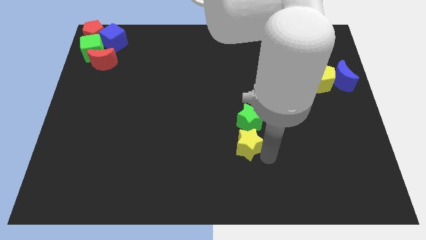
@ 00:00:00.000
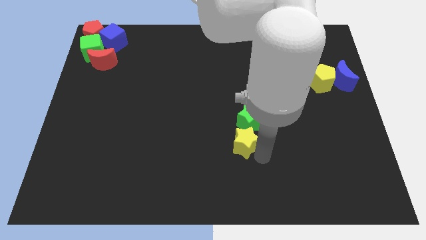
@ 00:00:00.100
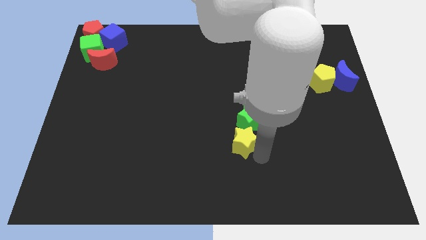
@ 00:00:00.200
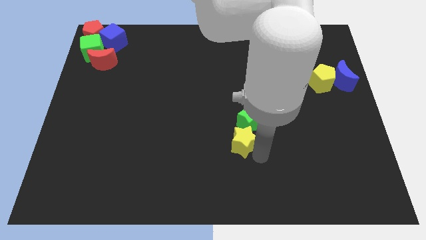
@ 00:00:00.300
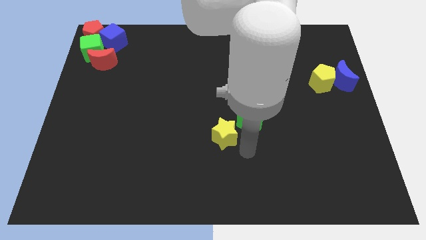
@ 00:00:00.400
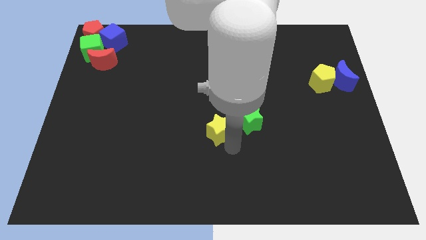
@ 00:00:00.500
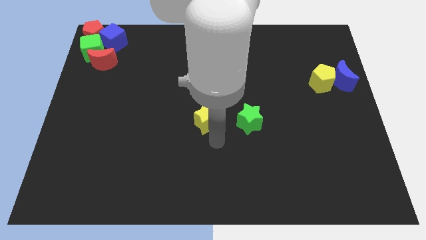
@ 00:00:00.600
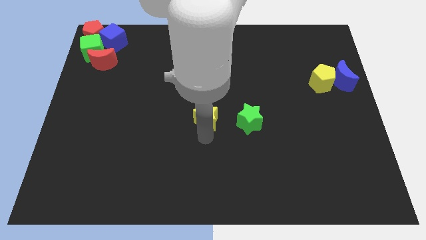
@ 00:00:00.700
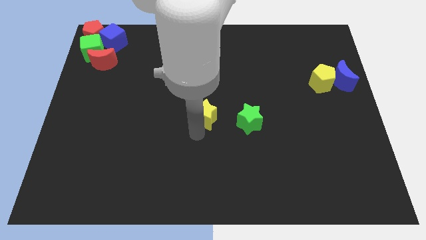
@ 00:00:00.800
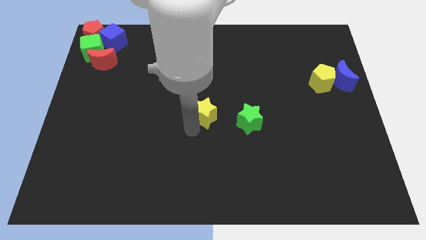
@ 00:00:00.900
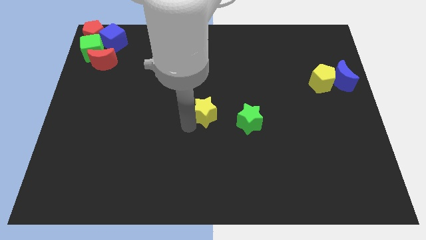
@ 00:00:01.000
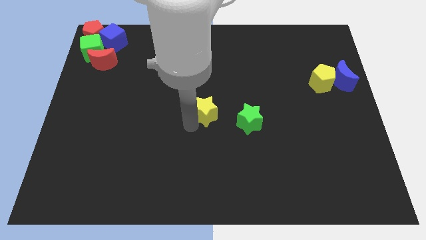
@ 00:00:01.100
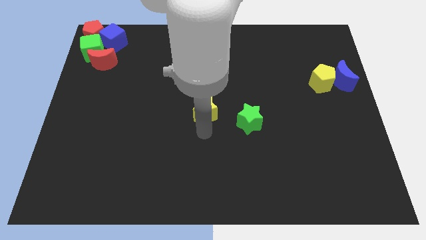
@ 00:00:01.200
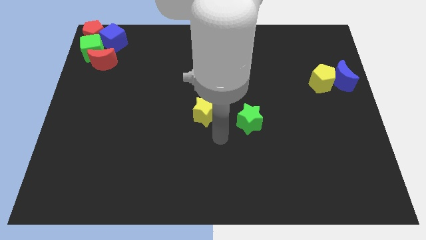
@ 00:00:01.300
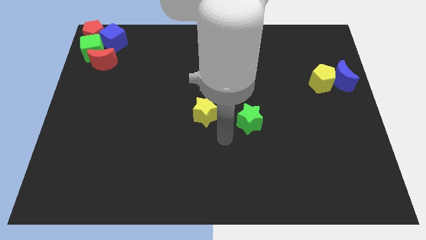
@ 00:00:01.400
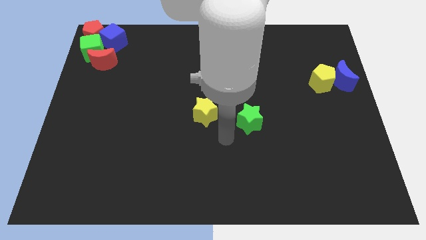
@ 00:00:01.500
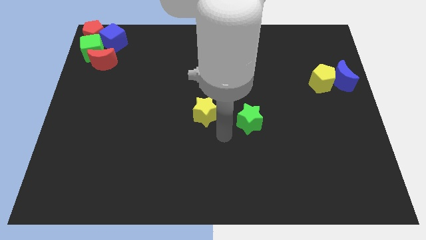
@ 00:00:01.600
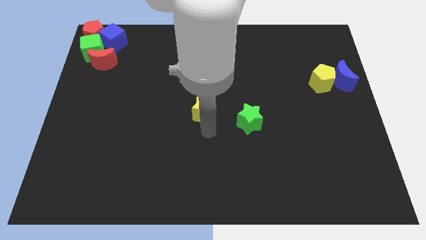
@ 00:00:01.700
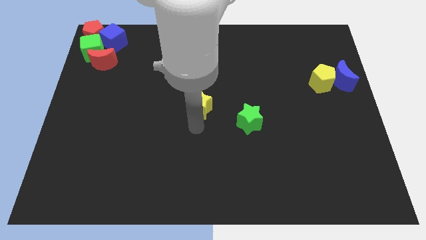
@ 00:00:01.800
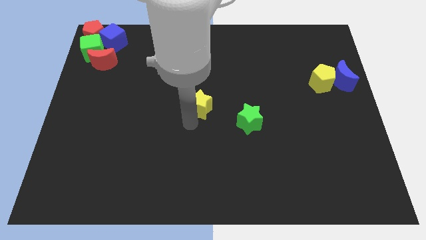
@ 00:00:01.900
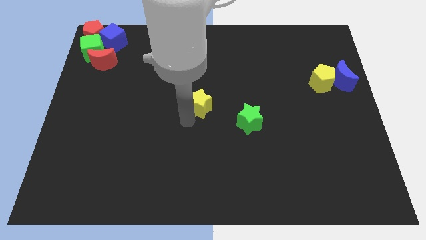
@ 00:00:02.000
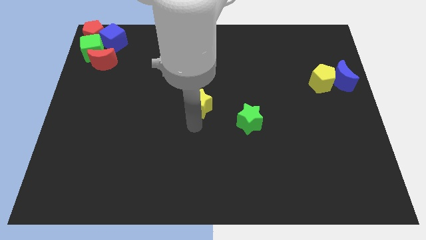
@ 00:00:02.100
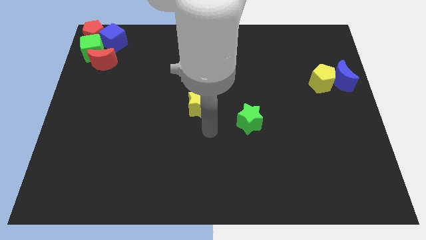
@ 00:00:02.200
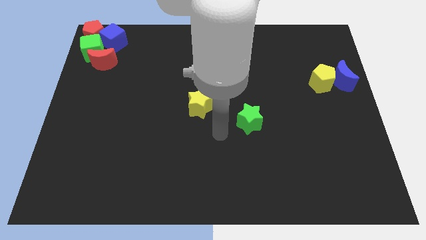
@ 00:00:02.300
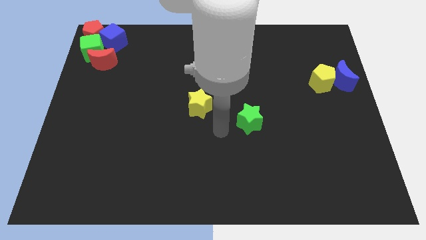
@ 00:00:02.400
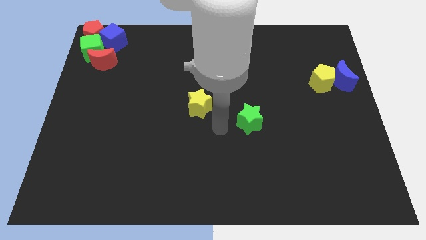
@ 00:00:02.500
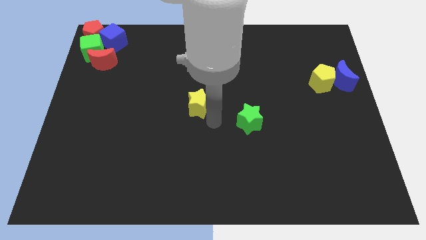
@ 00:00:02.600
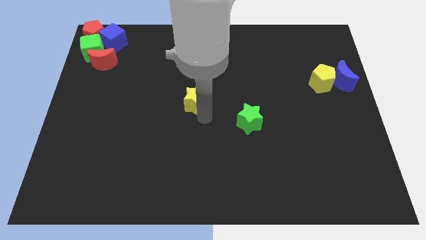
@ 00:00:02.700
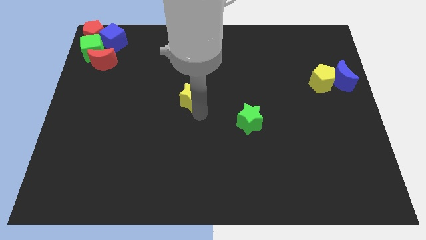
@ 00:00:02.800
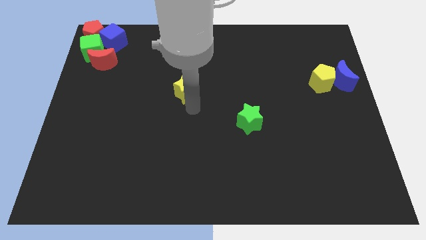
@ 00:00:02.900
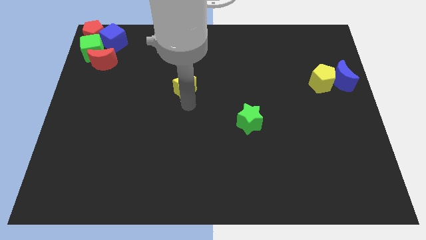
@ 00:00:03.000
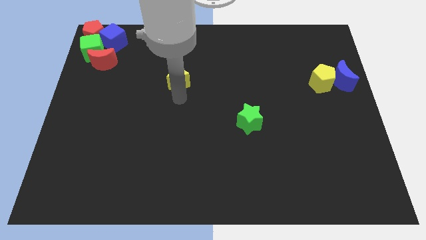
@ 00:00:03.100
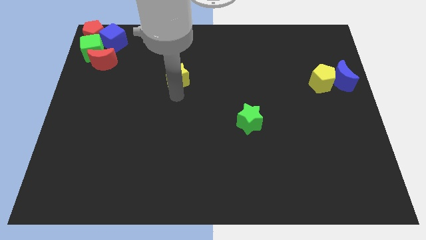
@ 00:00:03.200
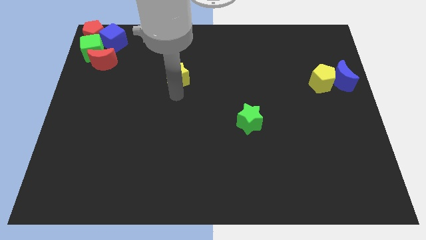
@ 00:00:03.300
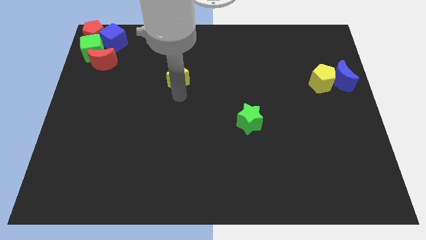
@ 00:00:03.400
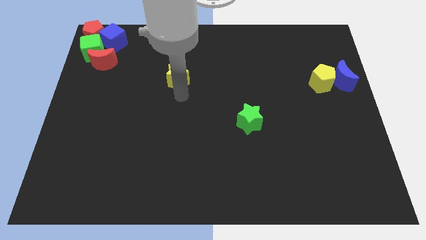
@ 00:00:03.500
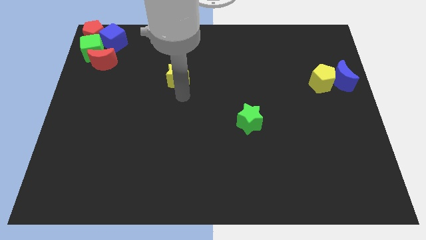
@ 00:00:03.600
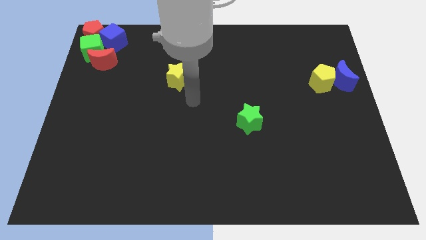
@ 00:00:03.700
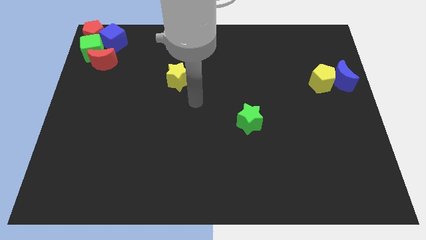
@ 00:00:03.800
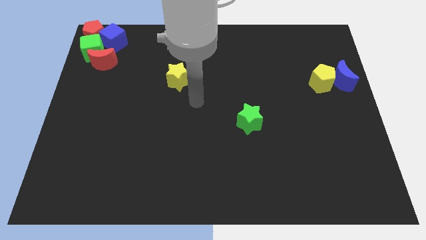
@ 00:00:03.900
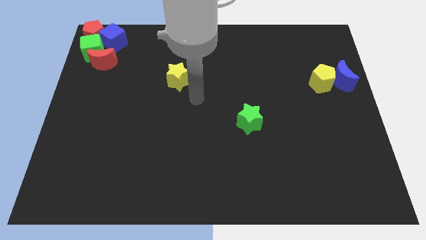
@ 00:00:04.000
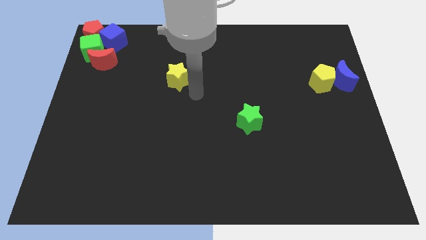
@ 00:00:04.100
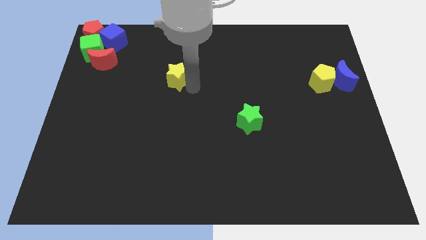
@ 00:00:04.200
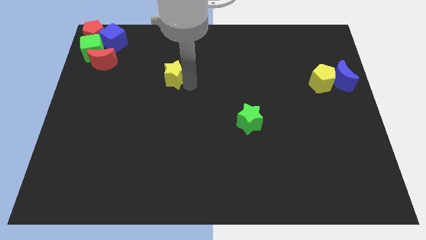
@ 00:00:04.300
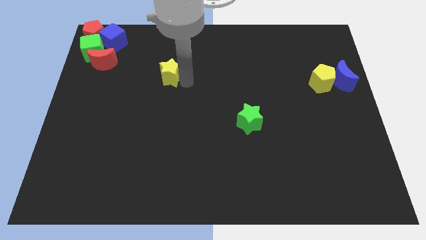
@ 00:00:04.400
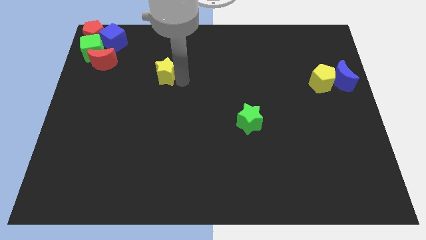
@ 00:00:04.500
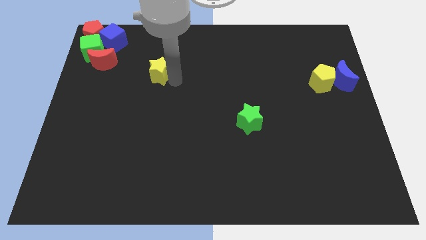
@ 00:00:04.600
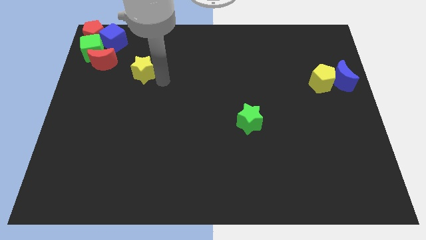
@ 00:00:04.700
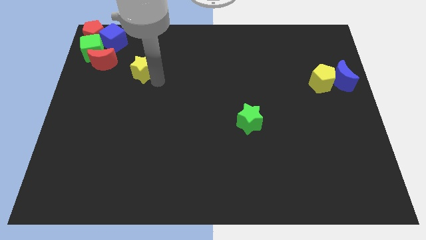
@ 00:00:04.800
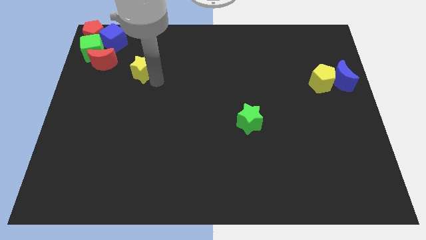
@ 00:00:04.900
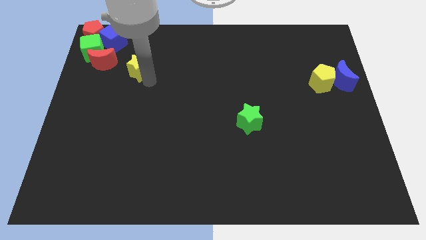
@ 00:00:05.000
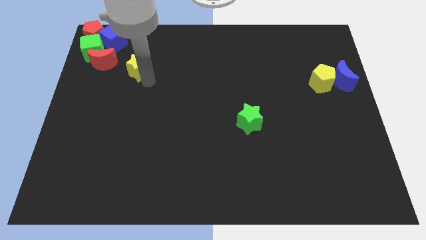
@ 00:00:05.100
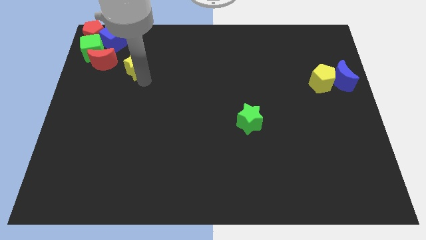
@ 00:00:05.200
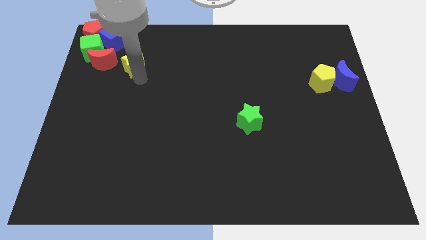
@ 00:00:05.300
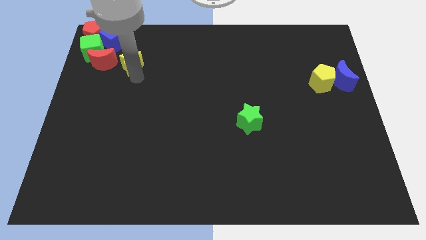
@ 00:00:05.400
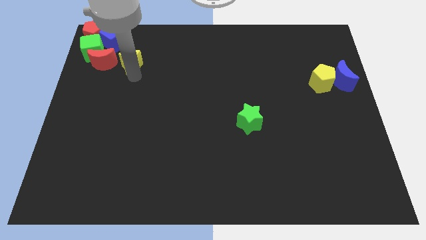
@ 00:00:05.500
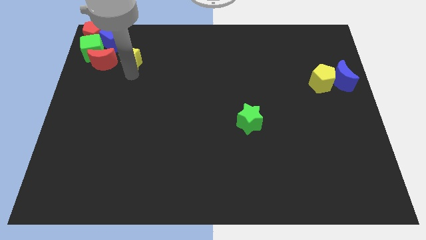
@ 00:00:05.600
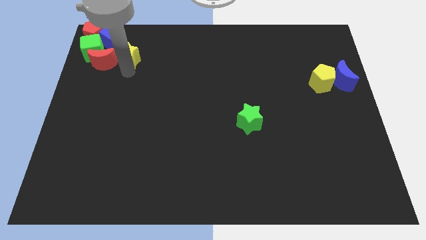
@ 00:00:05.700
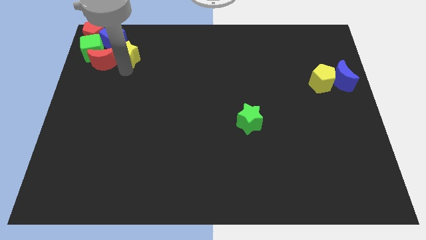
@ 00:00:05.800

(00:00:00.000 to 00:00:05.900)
move the yellow star towards a group of blocks

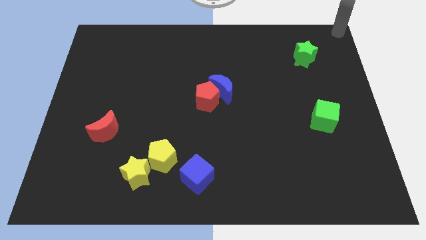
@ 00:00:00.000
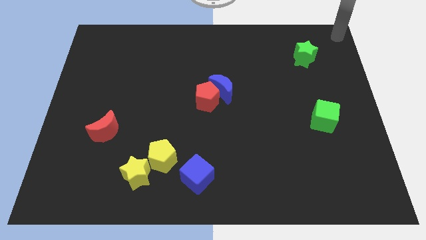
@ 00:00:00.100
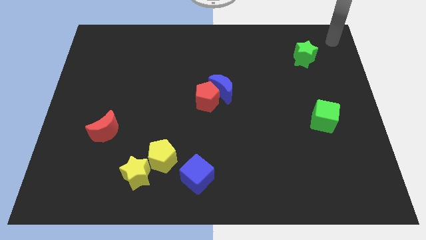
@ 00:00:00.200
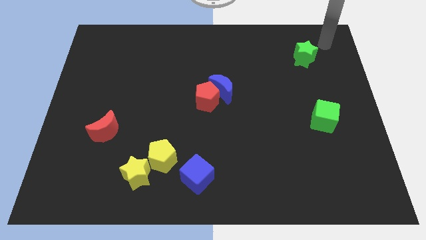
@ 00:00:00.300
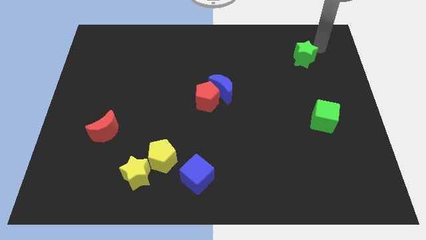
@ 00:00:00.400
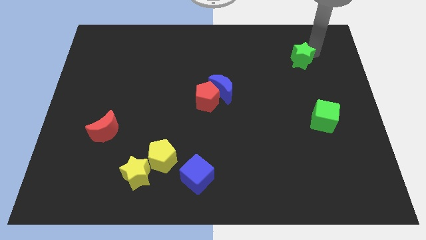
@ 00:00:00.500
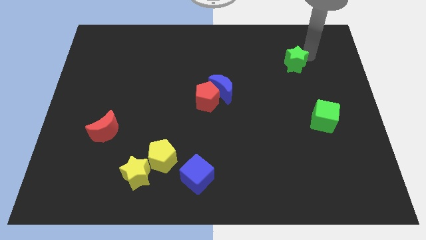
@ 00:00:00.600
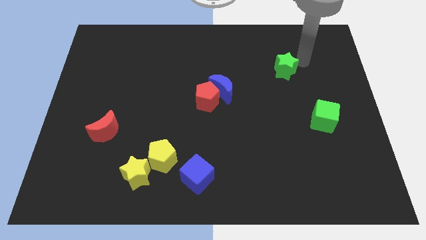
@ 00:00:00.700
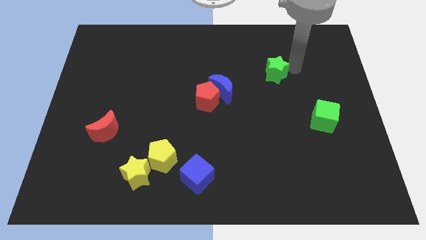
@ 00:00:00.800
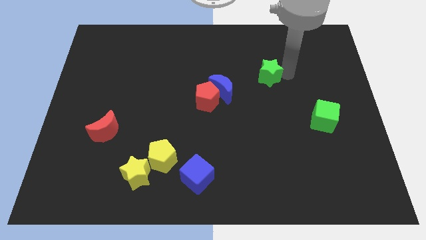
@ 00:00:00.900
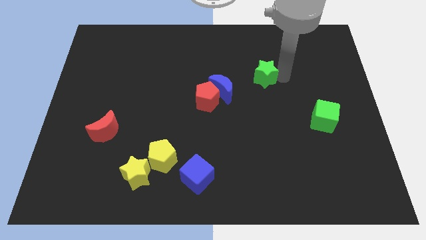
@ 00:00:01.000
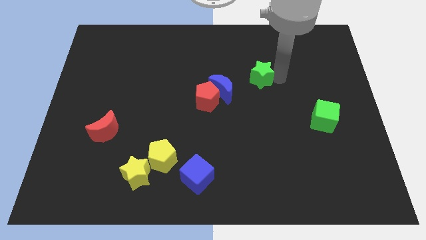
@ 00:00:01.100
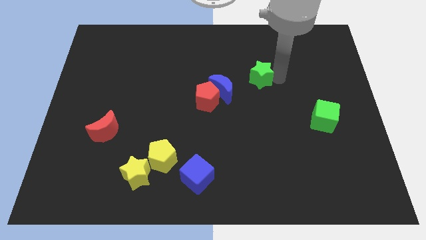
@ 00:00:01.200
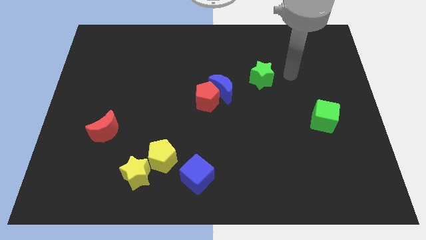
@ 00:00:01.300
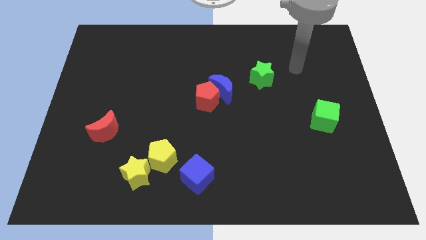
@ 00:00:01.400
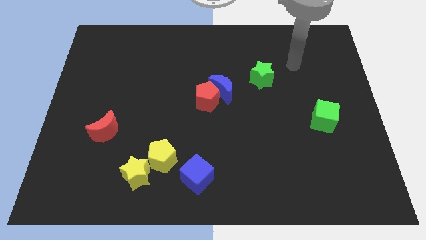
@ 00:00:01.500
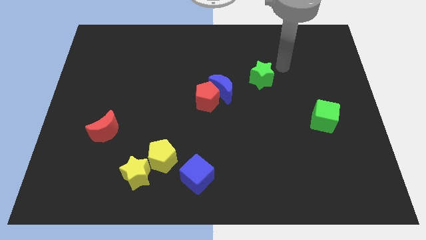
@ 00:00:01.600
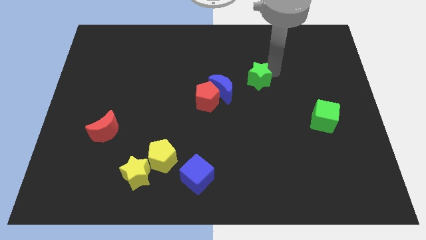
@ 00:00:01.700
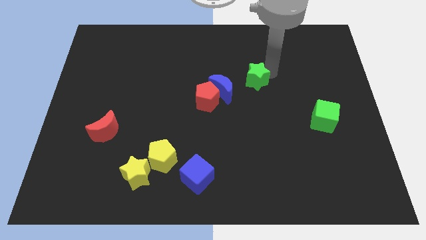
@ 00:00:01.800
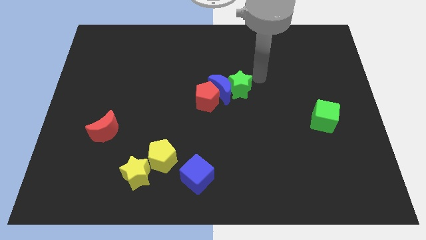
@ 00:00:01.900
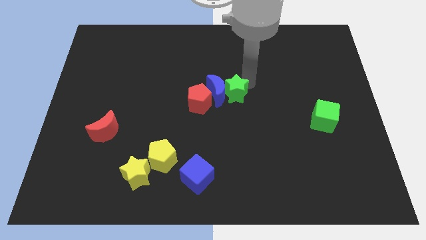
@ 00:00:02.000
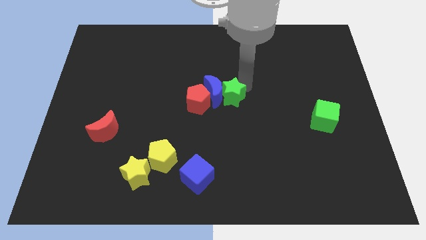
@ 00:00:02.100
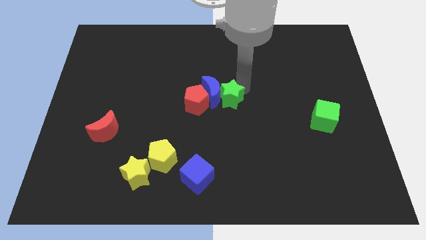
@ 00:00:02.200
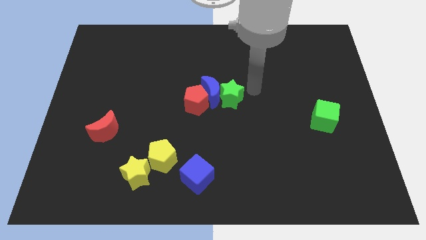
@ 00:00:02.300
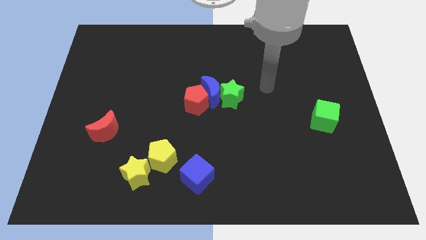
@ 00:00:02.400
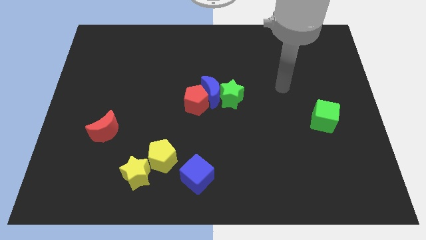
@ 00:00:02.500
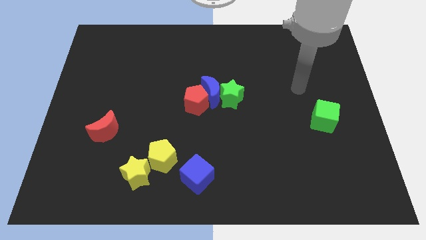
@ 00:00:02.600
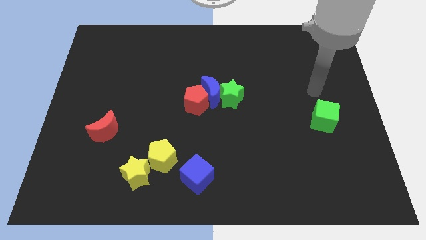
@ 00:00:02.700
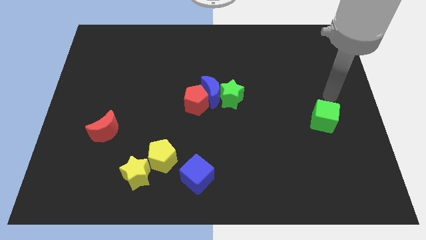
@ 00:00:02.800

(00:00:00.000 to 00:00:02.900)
move the green star into the group of objects

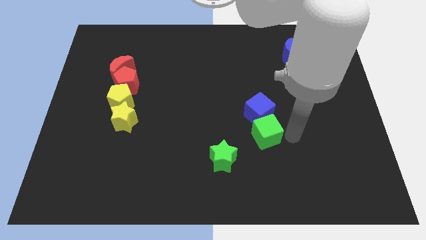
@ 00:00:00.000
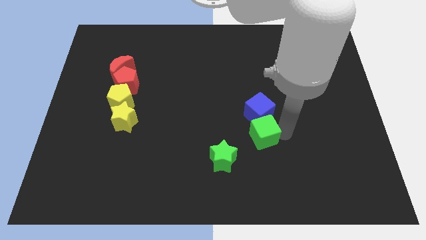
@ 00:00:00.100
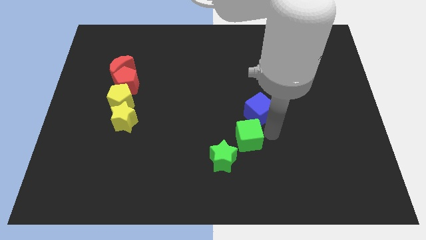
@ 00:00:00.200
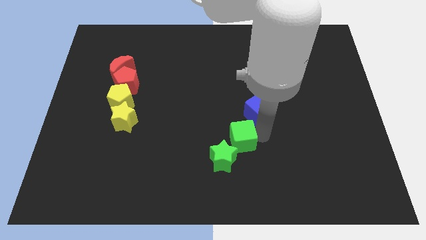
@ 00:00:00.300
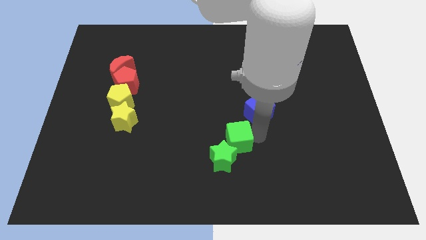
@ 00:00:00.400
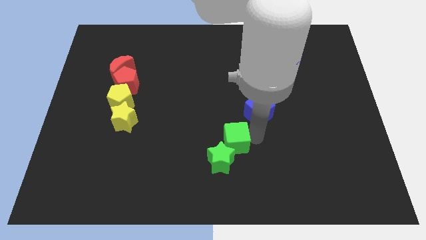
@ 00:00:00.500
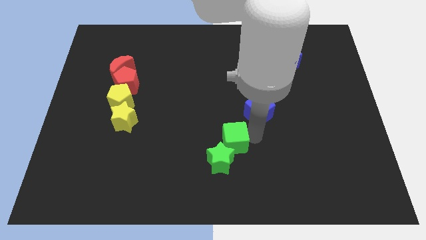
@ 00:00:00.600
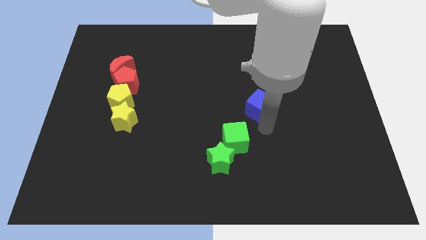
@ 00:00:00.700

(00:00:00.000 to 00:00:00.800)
push green cube towards green star
